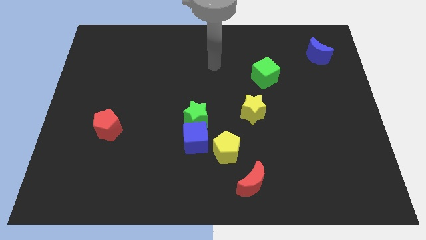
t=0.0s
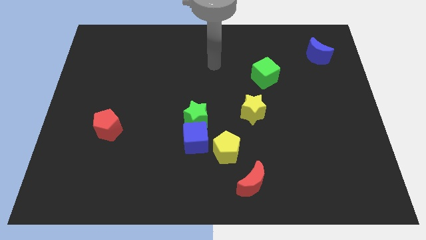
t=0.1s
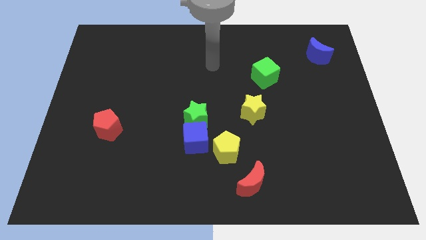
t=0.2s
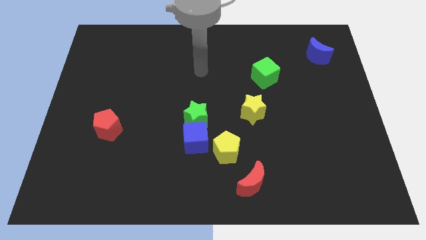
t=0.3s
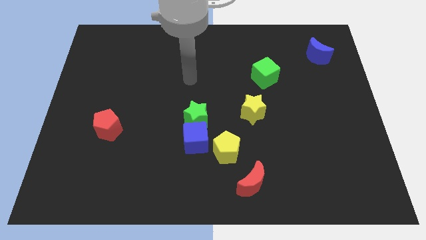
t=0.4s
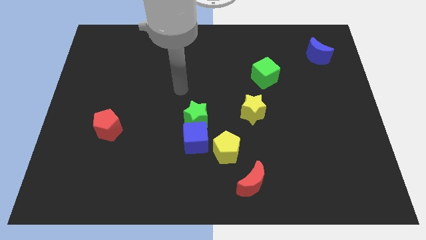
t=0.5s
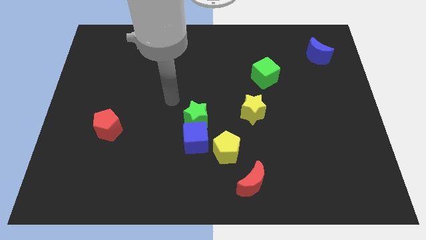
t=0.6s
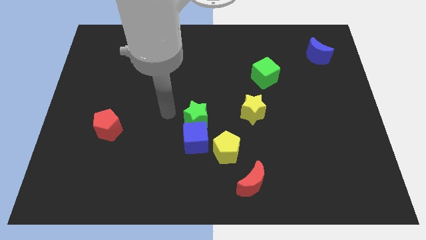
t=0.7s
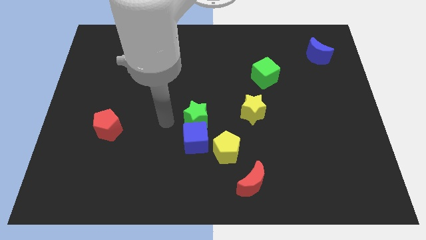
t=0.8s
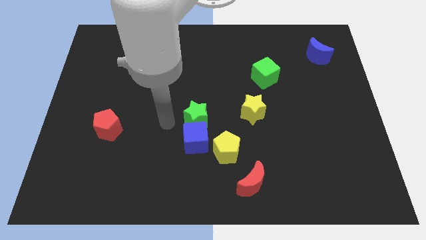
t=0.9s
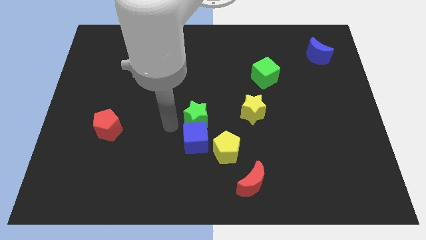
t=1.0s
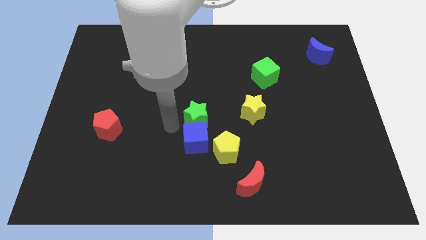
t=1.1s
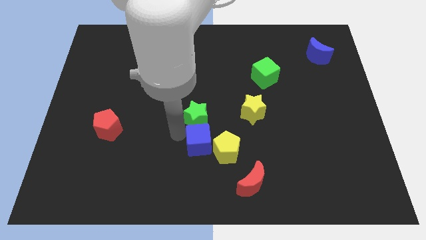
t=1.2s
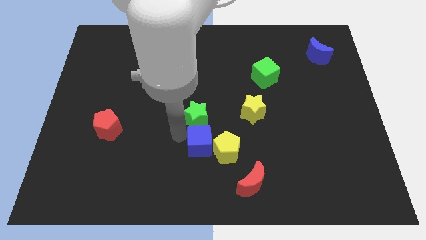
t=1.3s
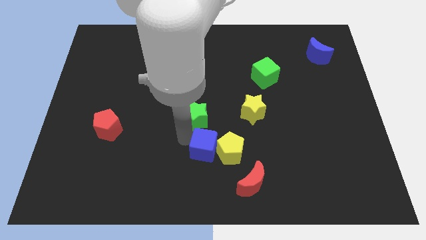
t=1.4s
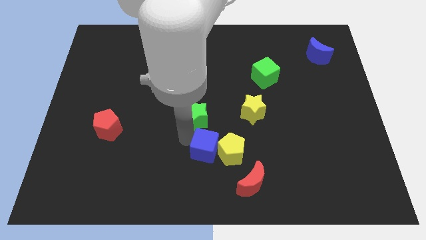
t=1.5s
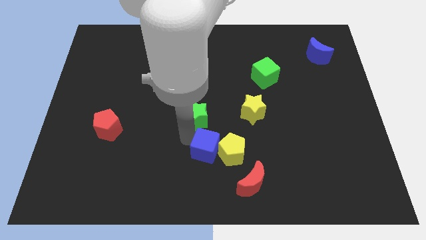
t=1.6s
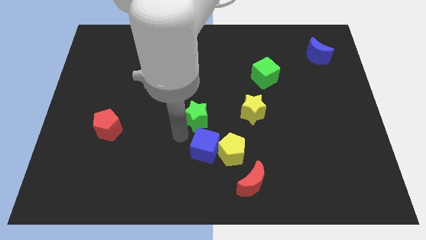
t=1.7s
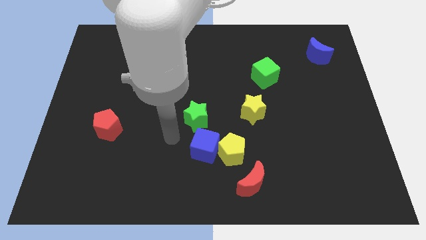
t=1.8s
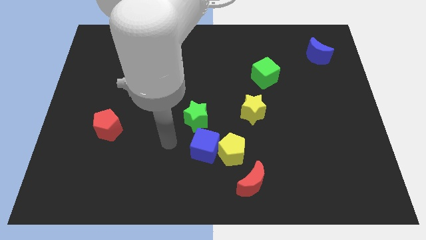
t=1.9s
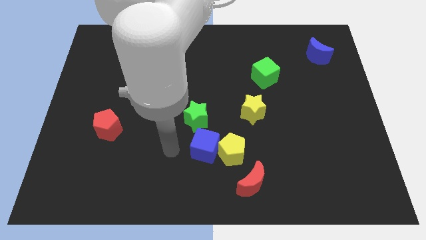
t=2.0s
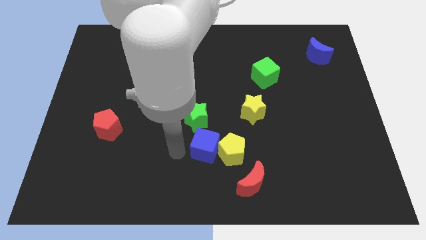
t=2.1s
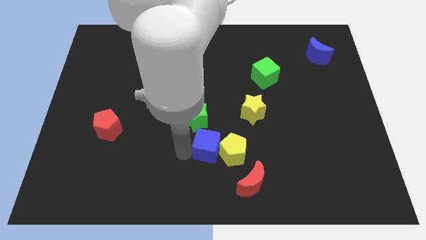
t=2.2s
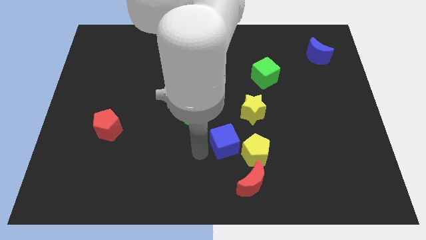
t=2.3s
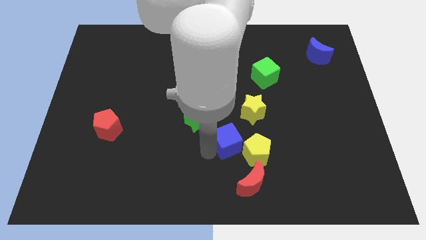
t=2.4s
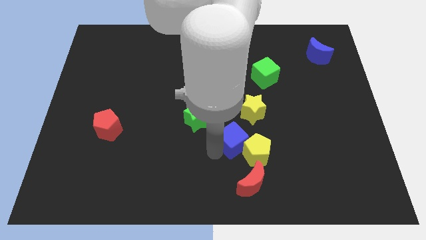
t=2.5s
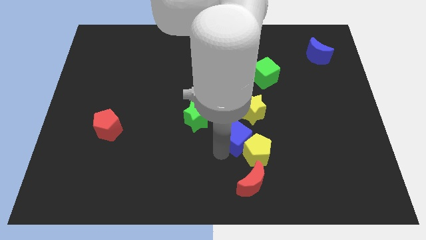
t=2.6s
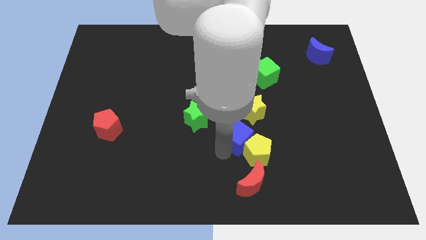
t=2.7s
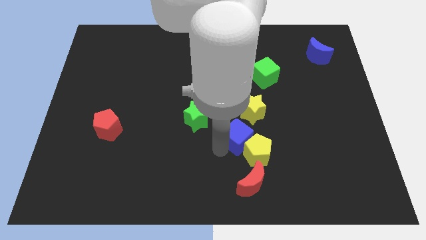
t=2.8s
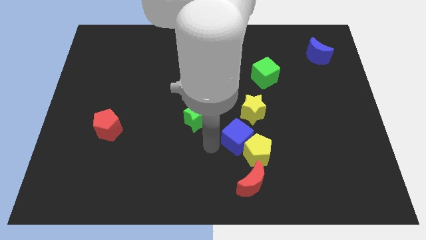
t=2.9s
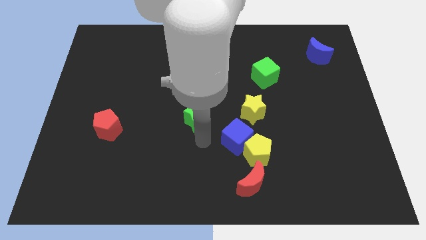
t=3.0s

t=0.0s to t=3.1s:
push the blue cube to the top left of the yellow pentagon

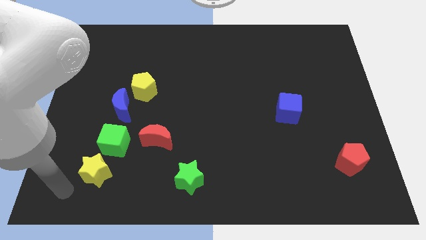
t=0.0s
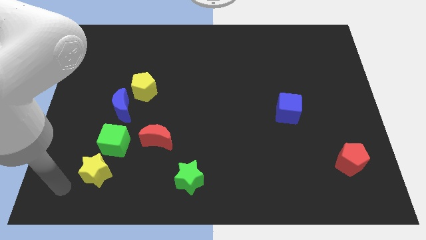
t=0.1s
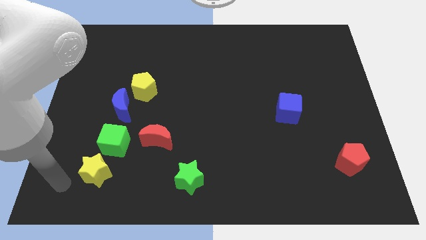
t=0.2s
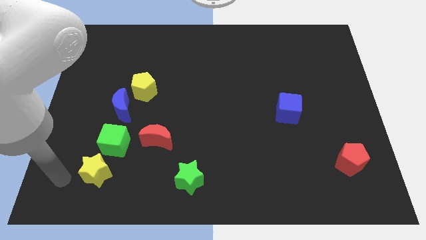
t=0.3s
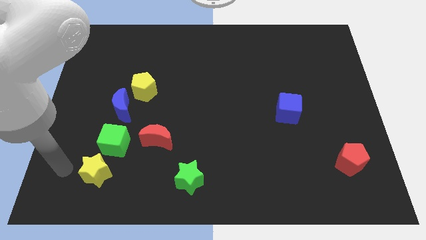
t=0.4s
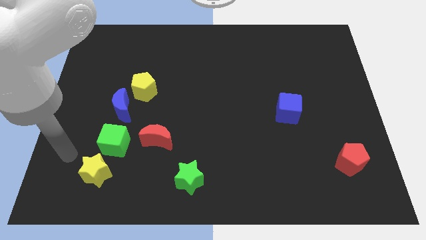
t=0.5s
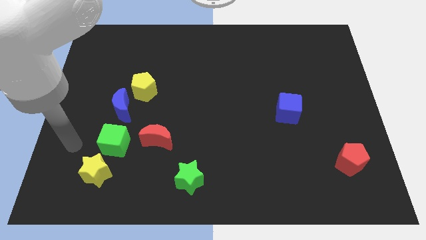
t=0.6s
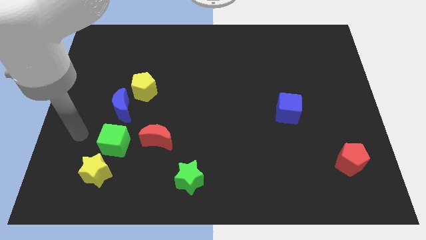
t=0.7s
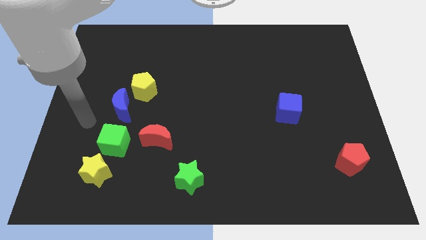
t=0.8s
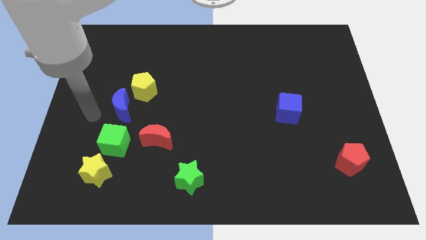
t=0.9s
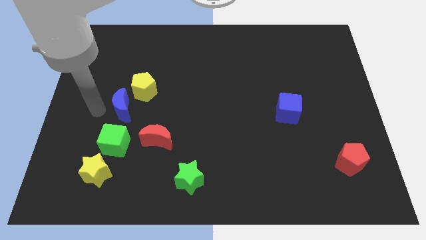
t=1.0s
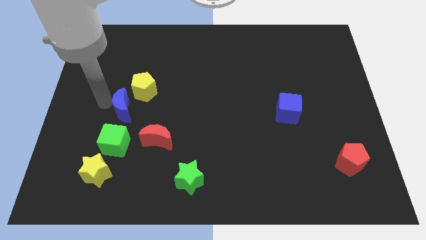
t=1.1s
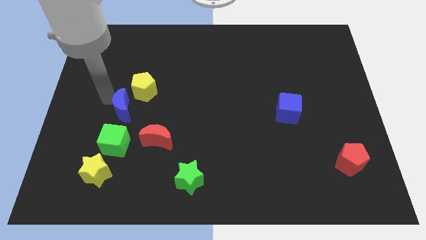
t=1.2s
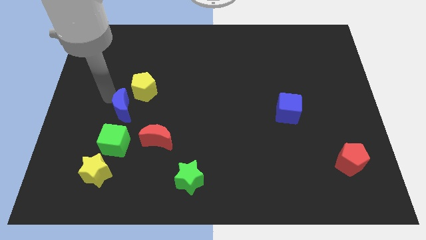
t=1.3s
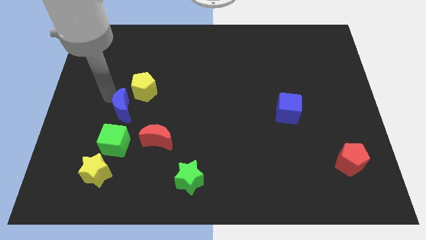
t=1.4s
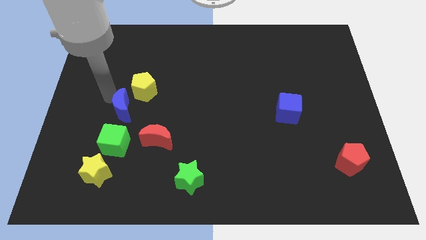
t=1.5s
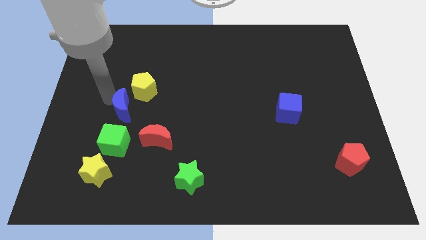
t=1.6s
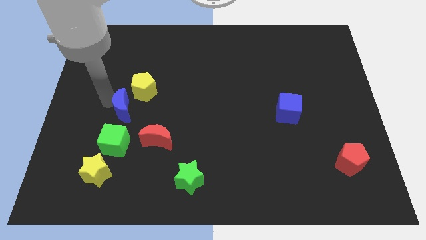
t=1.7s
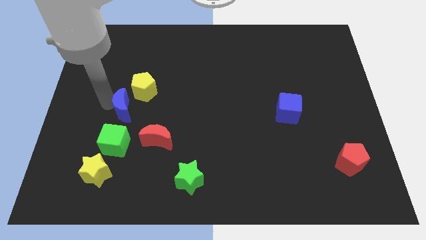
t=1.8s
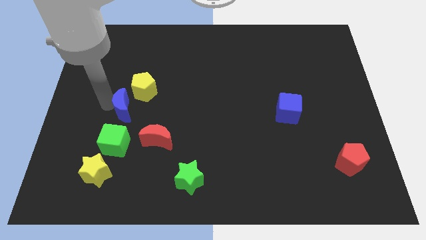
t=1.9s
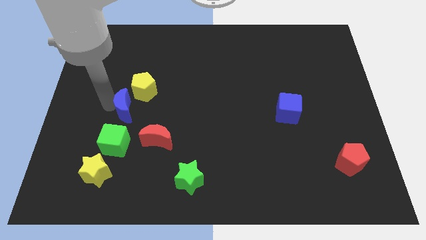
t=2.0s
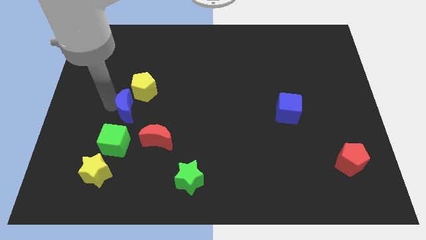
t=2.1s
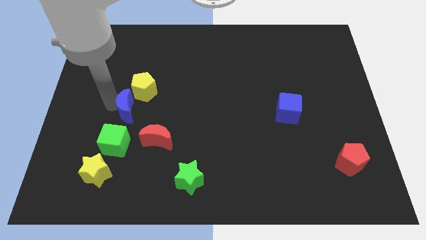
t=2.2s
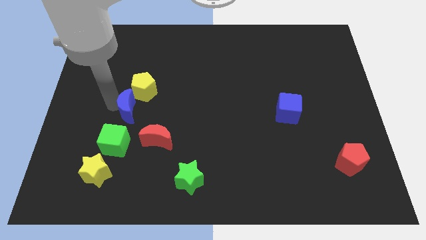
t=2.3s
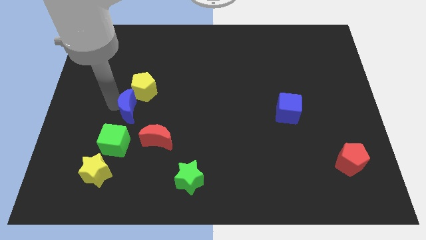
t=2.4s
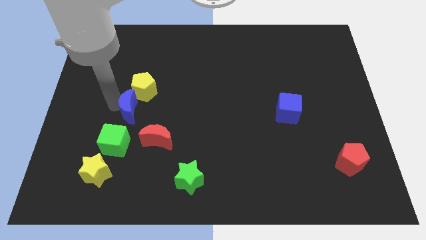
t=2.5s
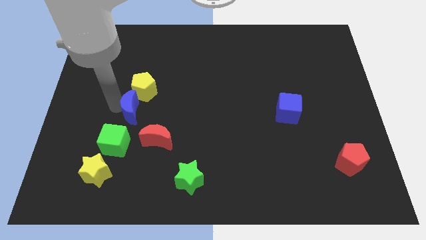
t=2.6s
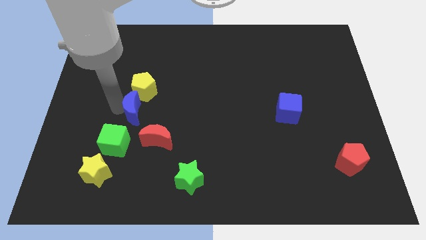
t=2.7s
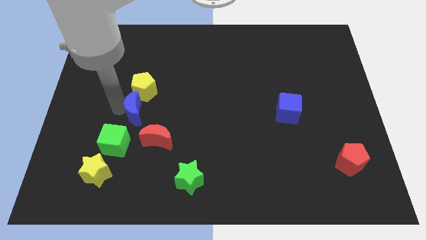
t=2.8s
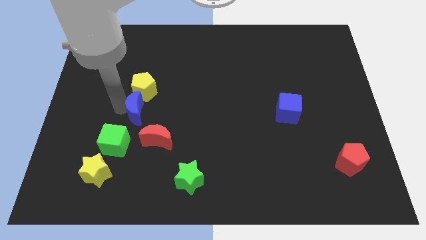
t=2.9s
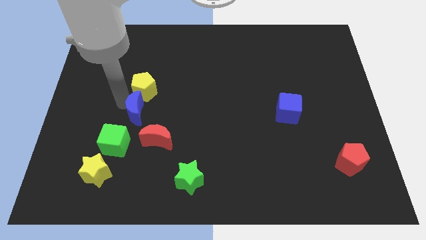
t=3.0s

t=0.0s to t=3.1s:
move the blue moon to the bottom of yellow pentagon

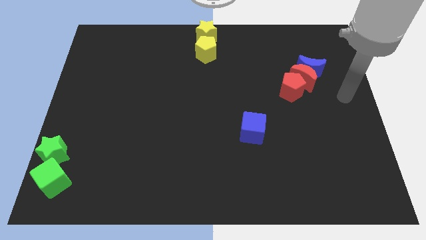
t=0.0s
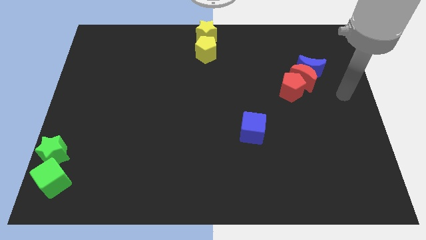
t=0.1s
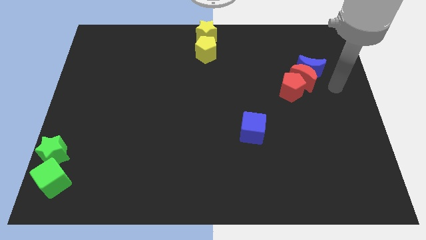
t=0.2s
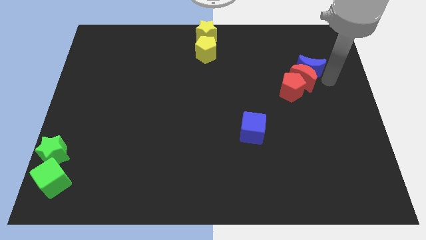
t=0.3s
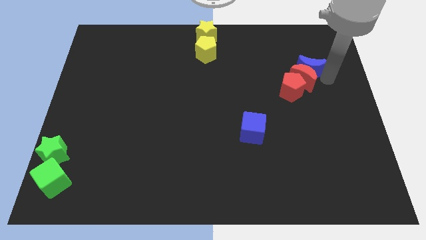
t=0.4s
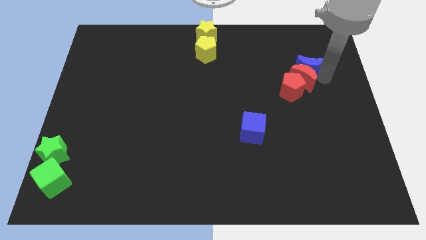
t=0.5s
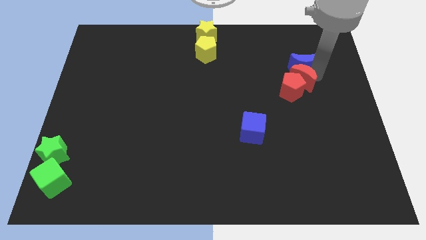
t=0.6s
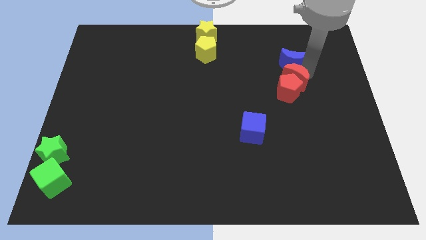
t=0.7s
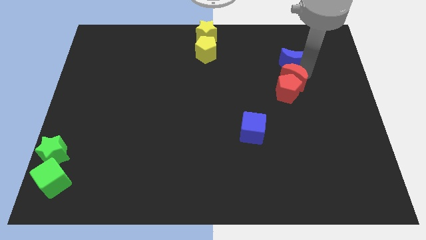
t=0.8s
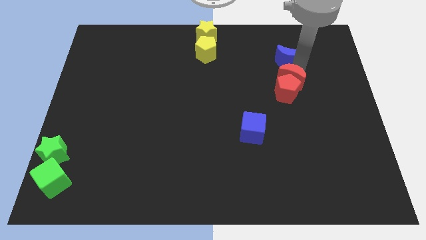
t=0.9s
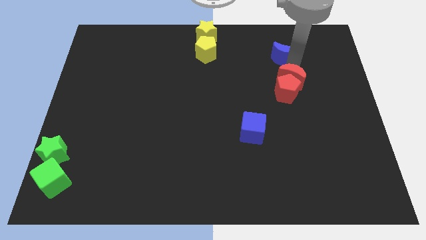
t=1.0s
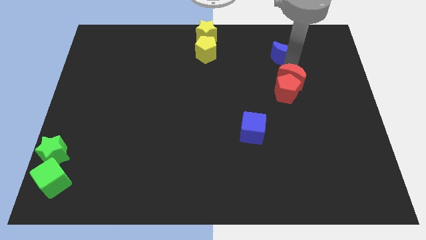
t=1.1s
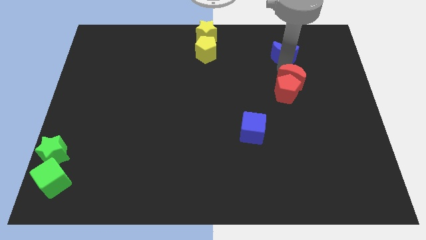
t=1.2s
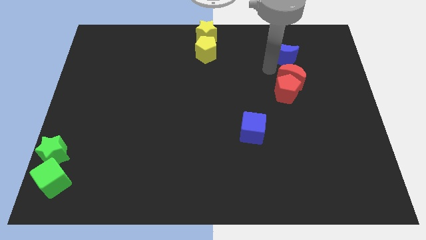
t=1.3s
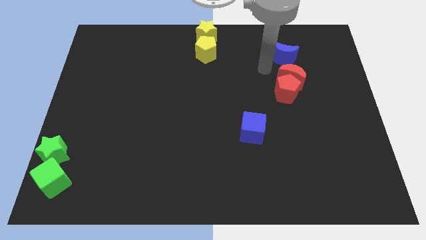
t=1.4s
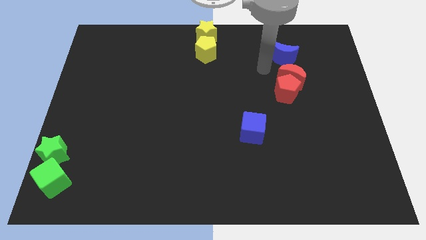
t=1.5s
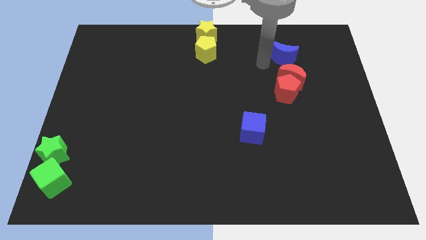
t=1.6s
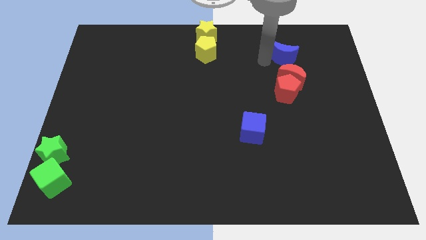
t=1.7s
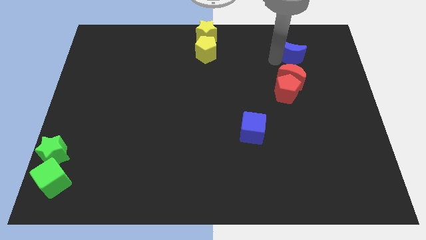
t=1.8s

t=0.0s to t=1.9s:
separate the blue moon and red moon

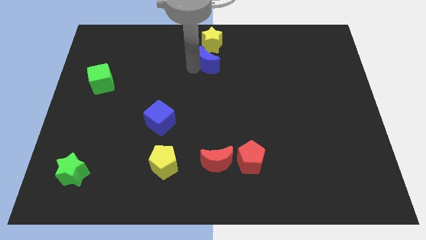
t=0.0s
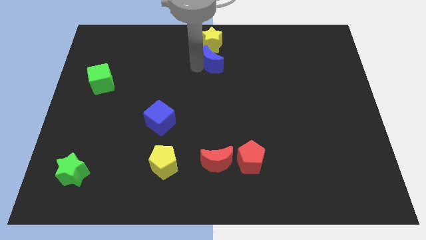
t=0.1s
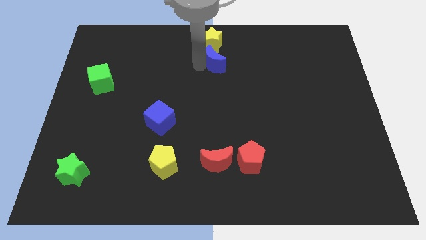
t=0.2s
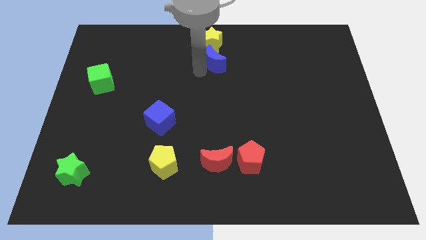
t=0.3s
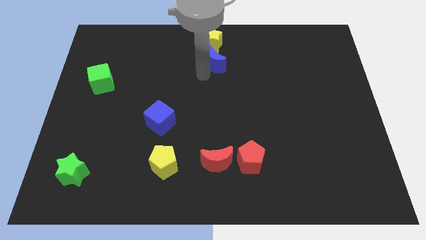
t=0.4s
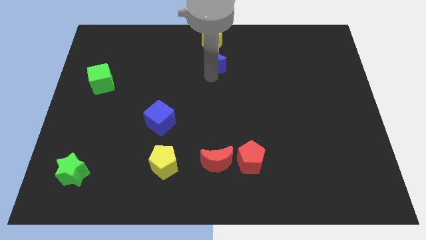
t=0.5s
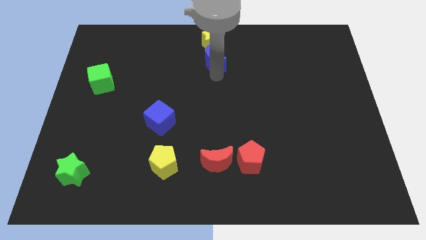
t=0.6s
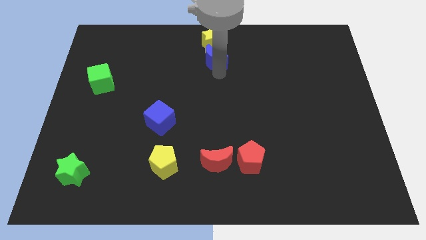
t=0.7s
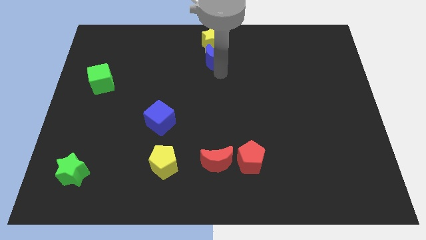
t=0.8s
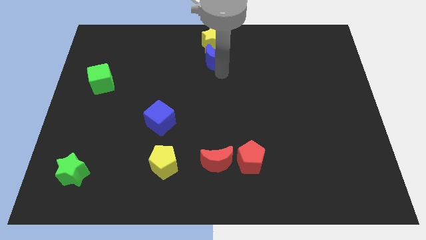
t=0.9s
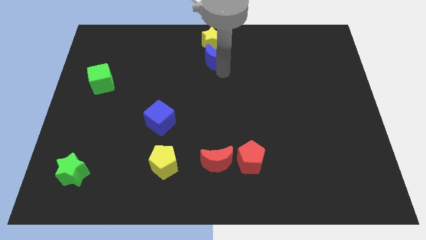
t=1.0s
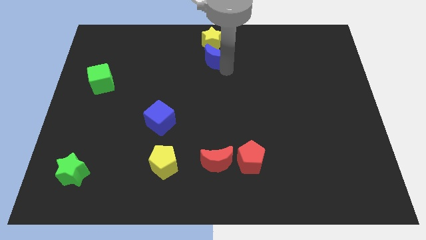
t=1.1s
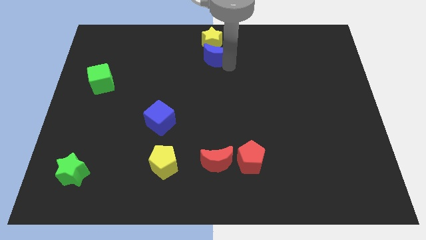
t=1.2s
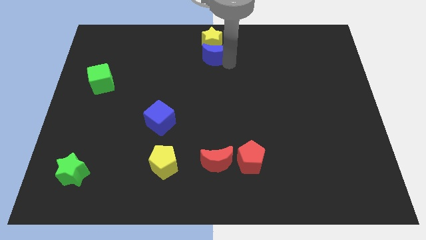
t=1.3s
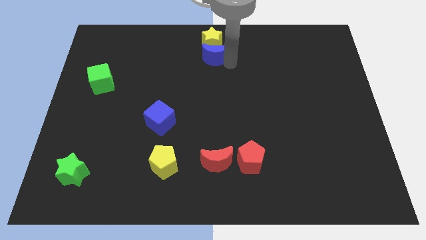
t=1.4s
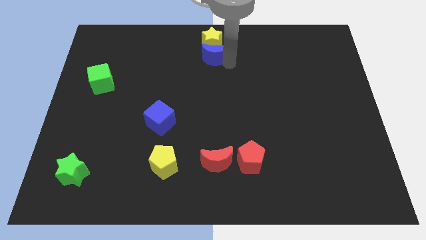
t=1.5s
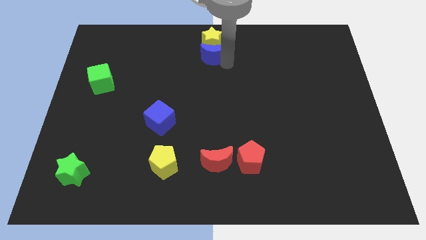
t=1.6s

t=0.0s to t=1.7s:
place the blue crescent below the yellow star
